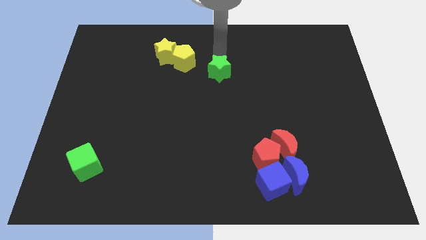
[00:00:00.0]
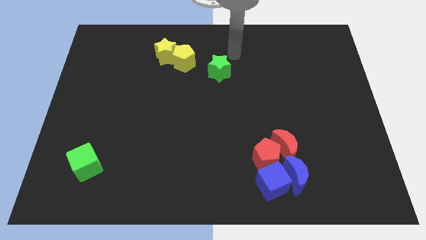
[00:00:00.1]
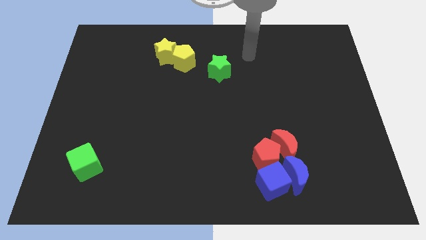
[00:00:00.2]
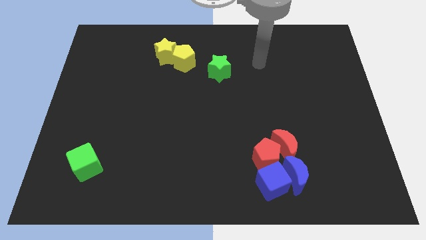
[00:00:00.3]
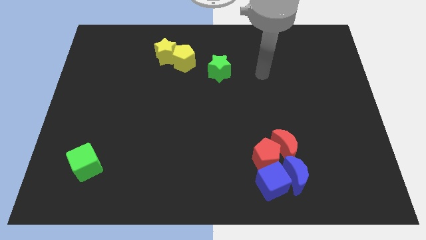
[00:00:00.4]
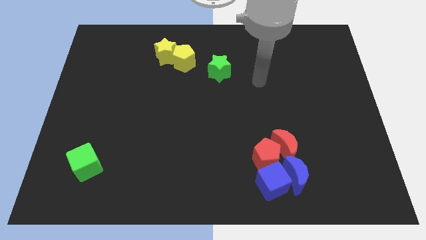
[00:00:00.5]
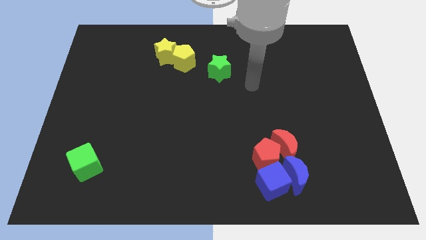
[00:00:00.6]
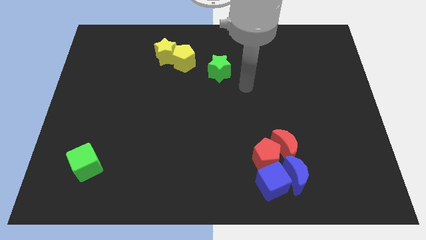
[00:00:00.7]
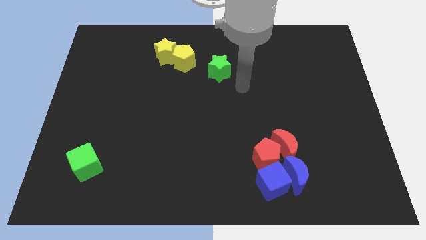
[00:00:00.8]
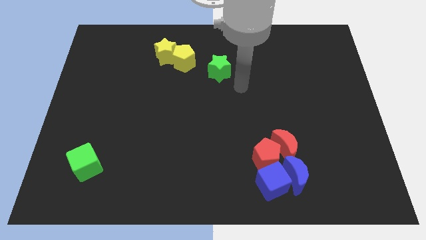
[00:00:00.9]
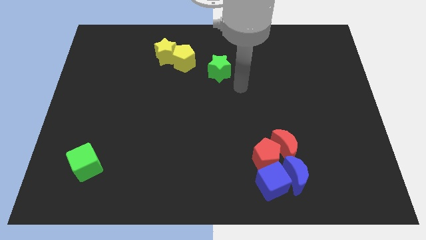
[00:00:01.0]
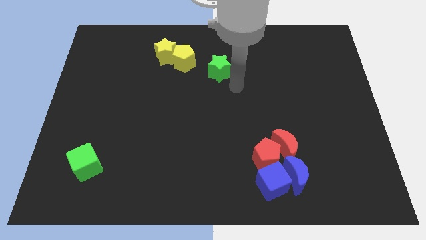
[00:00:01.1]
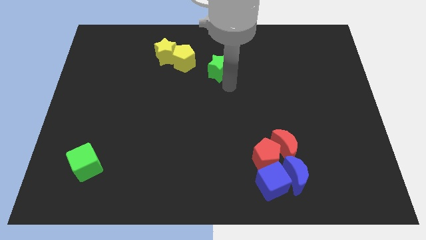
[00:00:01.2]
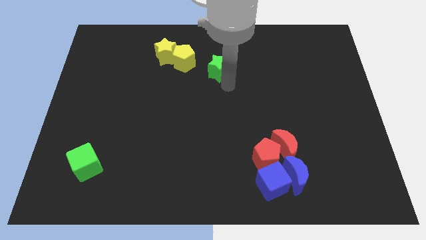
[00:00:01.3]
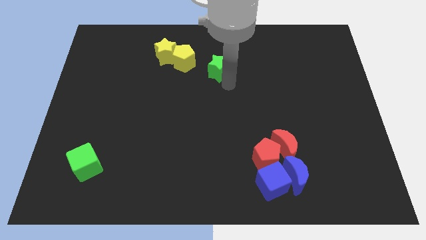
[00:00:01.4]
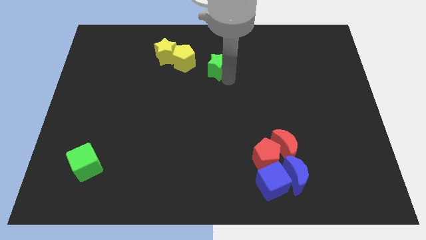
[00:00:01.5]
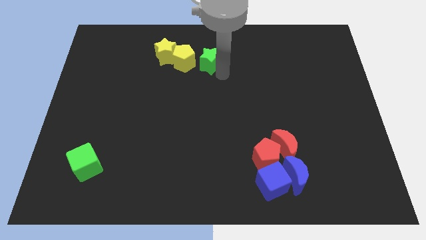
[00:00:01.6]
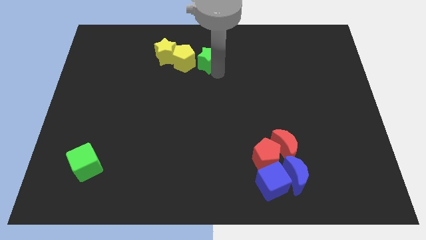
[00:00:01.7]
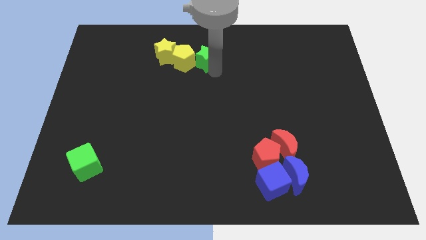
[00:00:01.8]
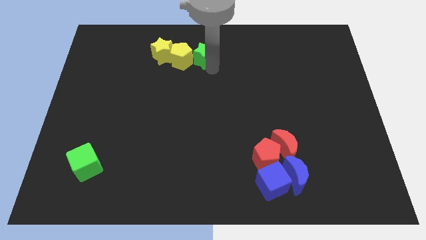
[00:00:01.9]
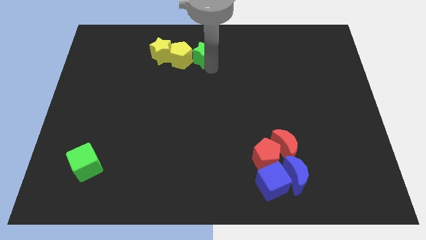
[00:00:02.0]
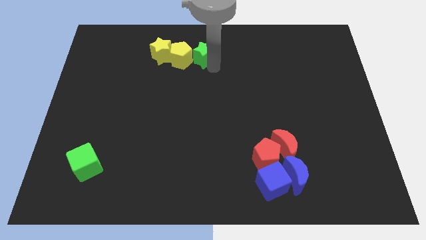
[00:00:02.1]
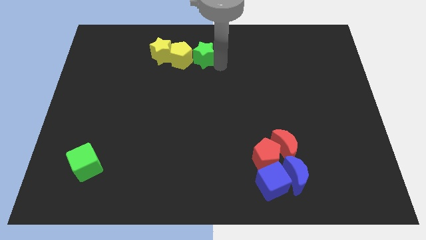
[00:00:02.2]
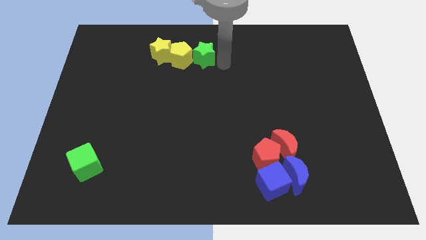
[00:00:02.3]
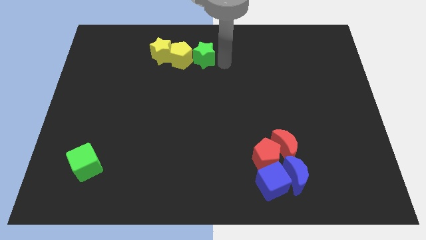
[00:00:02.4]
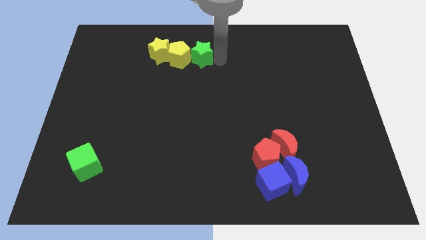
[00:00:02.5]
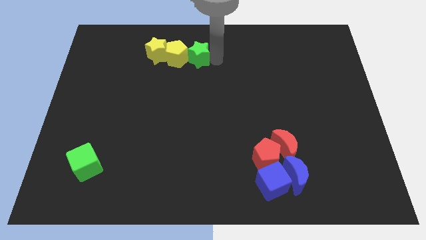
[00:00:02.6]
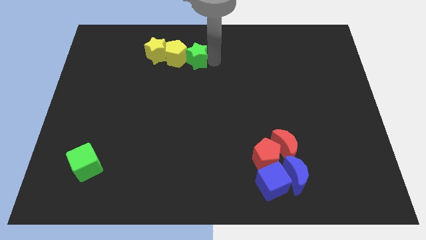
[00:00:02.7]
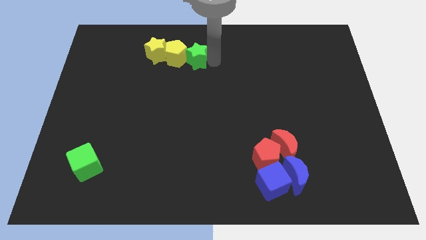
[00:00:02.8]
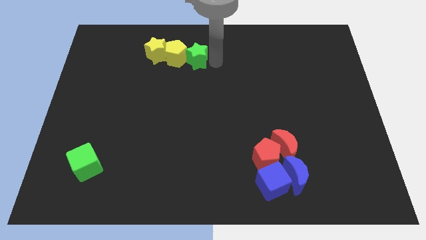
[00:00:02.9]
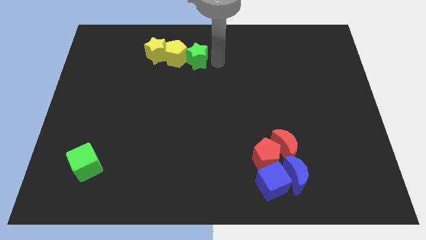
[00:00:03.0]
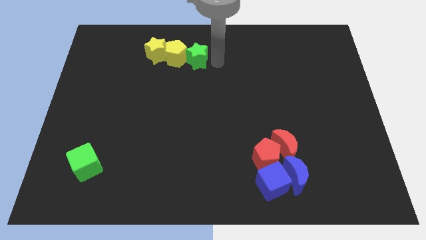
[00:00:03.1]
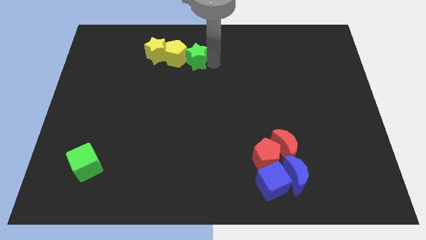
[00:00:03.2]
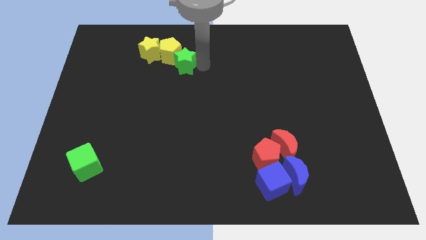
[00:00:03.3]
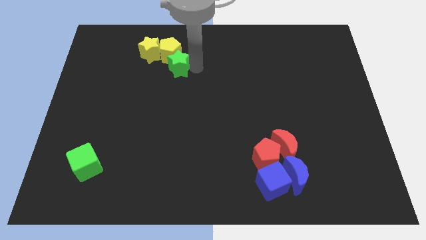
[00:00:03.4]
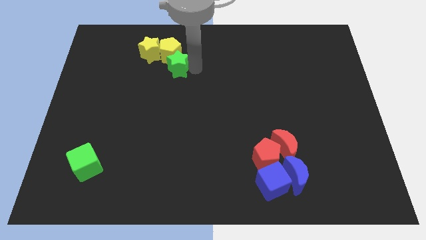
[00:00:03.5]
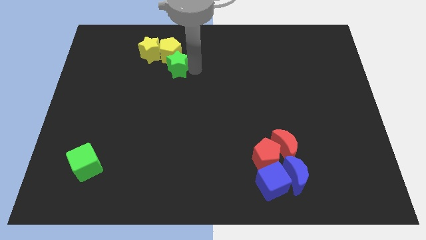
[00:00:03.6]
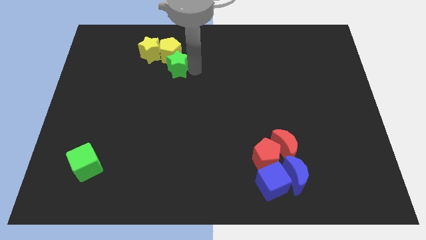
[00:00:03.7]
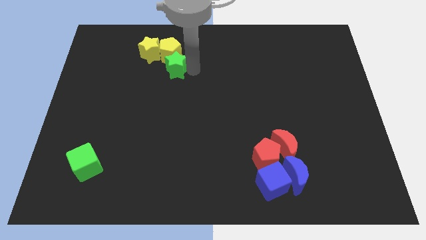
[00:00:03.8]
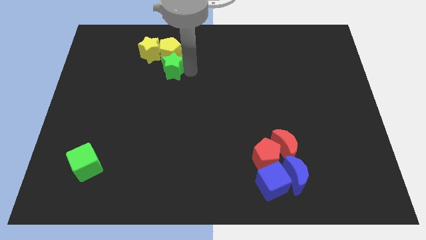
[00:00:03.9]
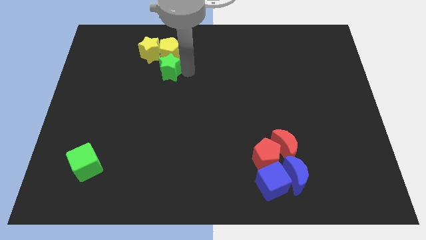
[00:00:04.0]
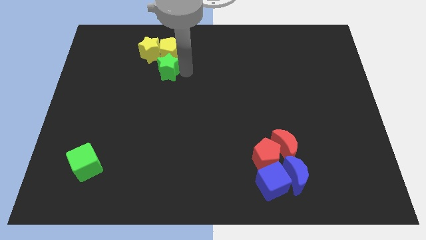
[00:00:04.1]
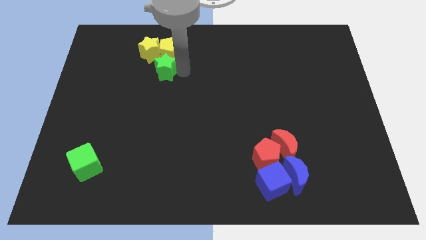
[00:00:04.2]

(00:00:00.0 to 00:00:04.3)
move the green star into the yellow blocks

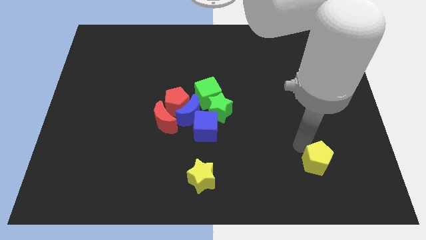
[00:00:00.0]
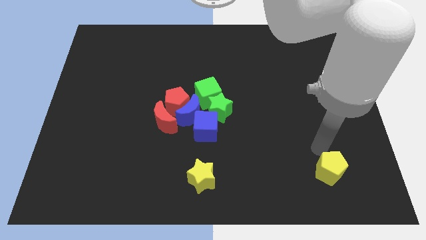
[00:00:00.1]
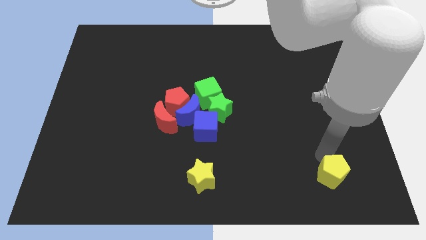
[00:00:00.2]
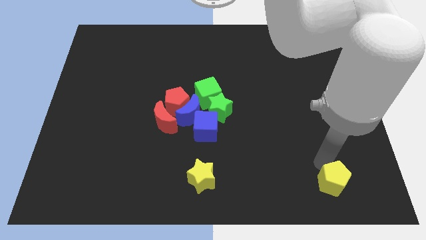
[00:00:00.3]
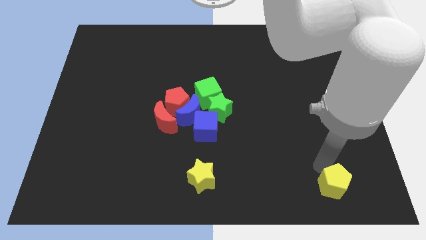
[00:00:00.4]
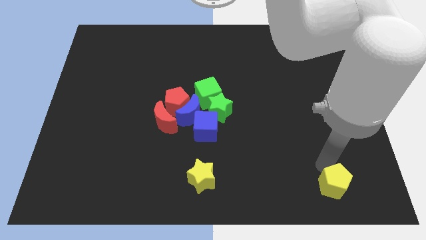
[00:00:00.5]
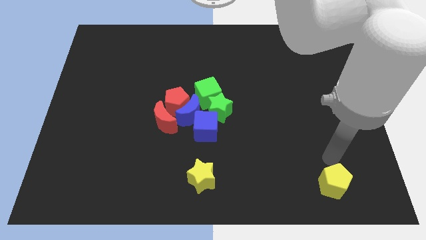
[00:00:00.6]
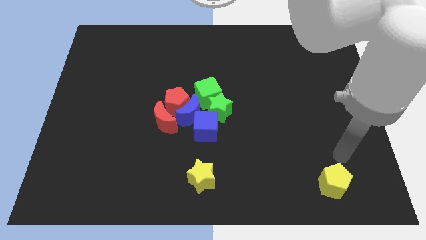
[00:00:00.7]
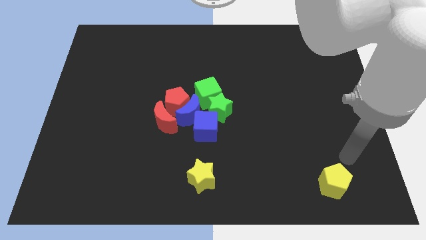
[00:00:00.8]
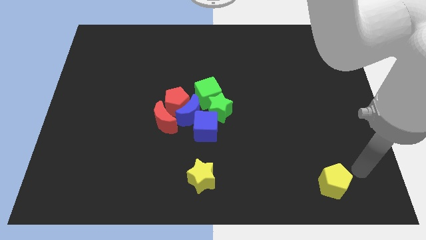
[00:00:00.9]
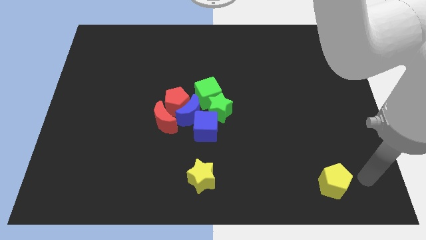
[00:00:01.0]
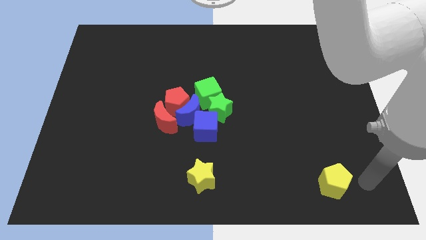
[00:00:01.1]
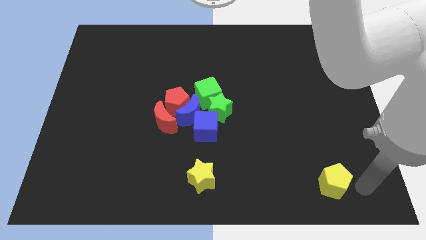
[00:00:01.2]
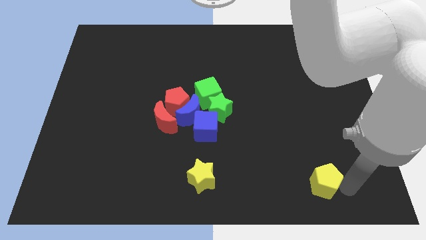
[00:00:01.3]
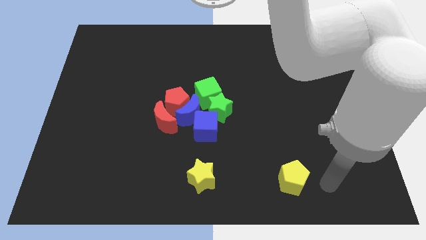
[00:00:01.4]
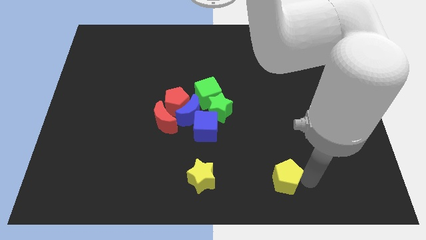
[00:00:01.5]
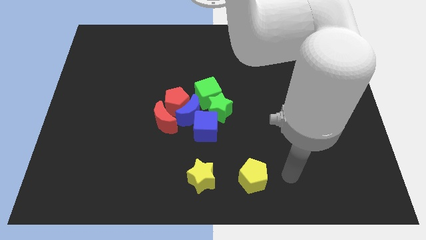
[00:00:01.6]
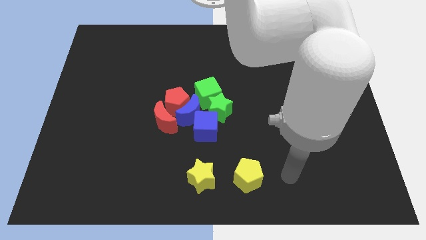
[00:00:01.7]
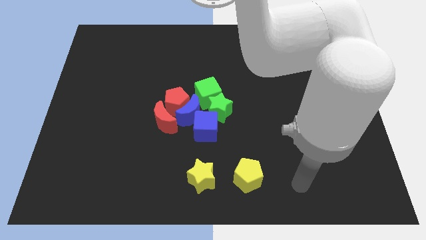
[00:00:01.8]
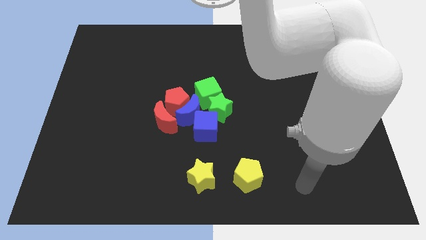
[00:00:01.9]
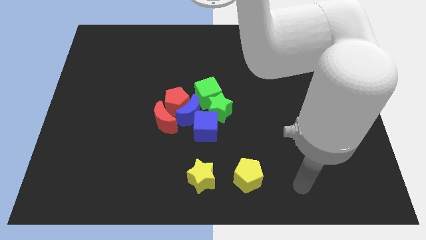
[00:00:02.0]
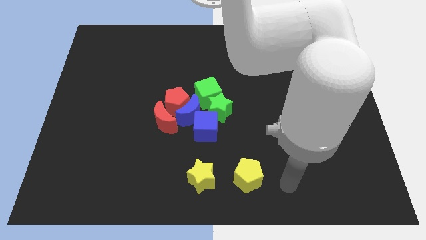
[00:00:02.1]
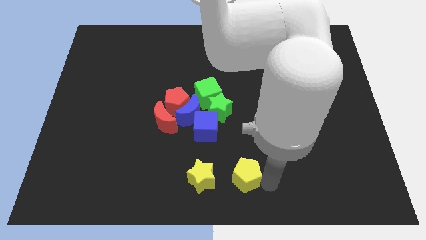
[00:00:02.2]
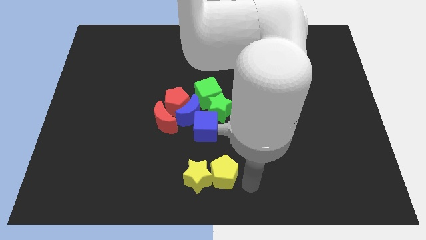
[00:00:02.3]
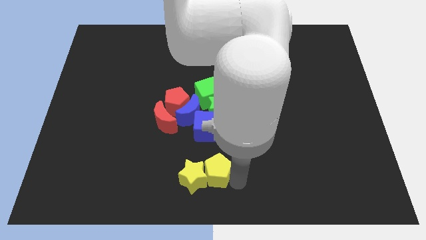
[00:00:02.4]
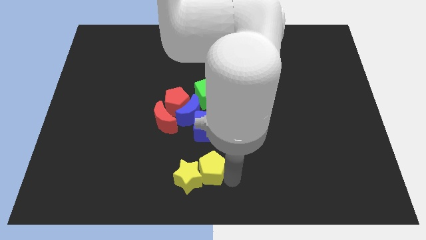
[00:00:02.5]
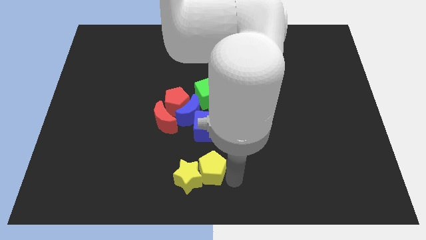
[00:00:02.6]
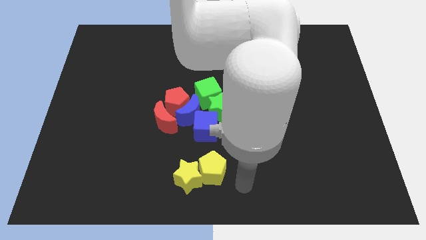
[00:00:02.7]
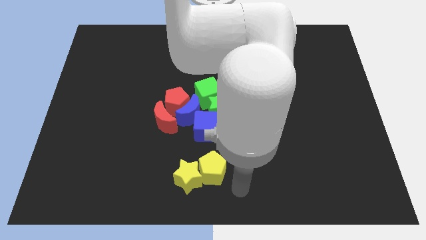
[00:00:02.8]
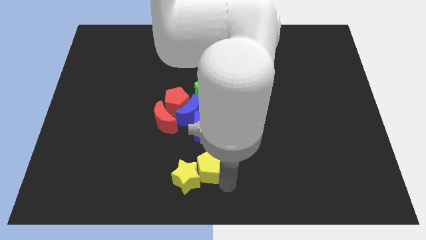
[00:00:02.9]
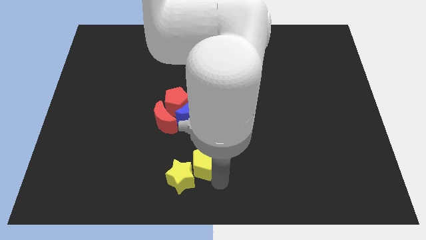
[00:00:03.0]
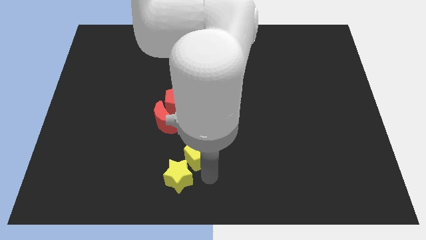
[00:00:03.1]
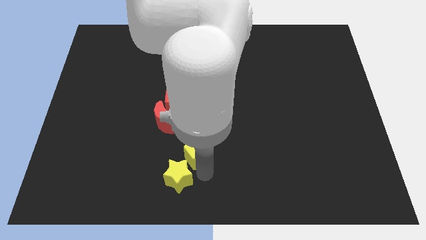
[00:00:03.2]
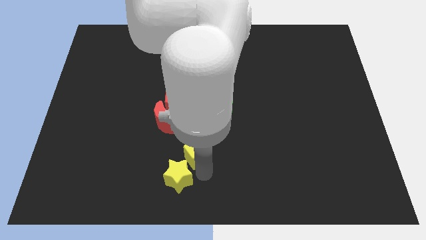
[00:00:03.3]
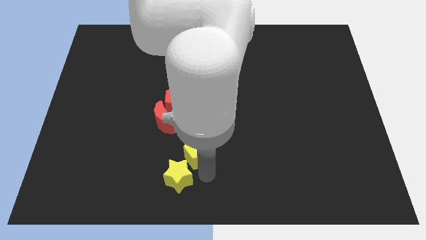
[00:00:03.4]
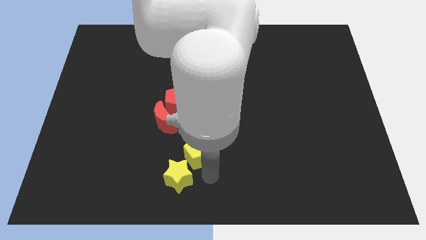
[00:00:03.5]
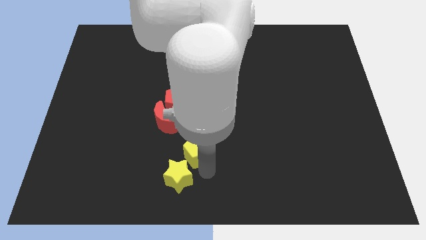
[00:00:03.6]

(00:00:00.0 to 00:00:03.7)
push the yellow star to the bottom of the board using yellow pentagon

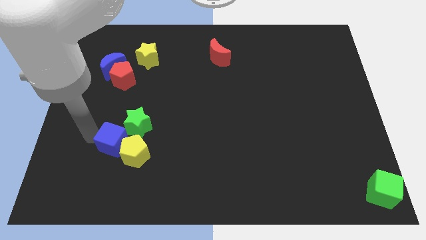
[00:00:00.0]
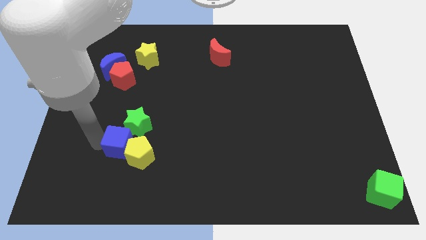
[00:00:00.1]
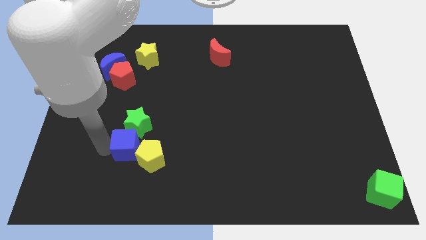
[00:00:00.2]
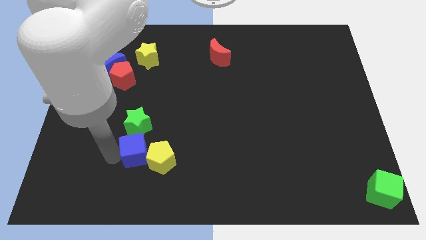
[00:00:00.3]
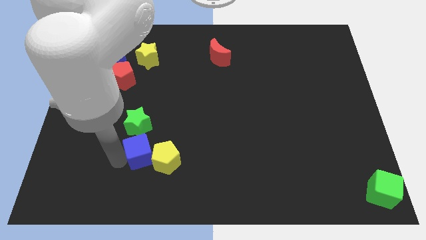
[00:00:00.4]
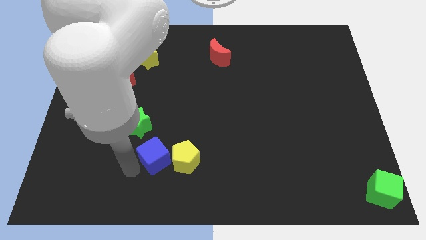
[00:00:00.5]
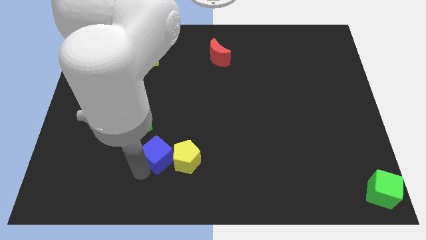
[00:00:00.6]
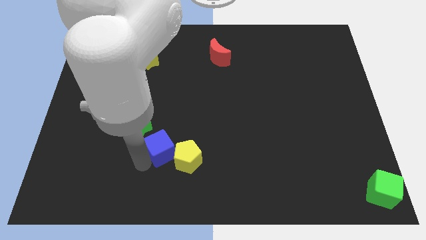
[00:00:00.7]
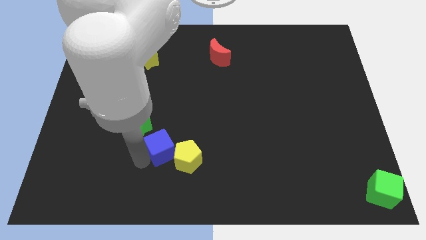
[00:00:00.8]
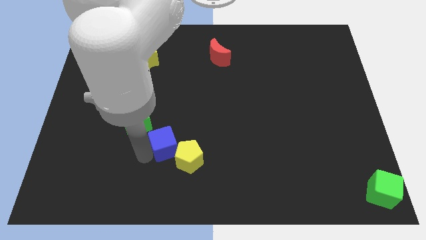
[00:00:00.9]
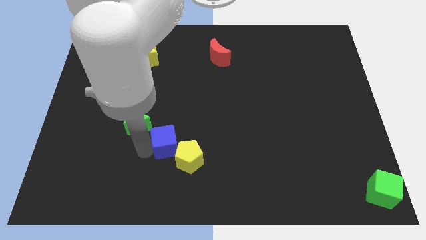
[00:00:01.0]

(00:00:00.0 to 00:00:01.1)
place the blue cube at the bottom right of the green star
